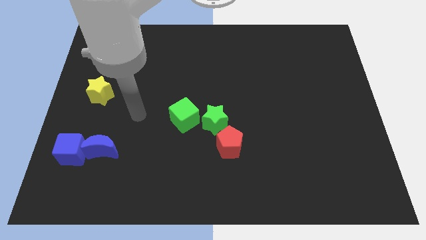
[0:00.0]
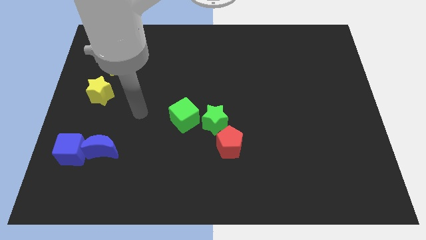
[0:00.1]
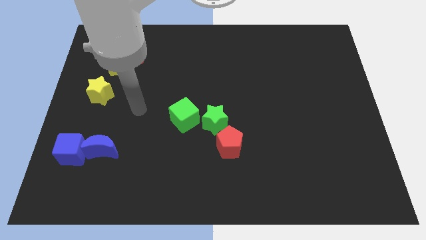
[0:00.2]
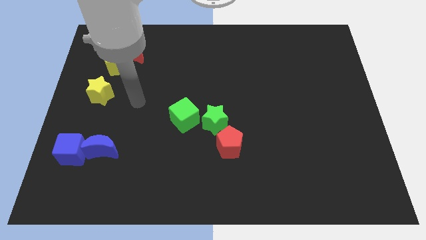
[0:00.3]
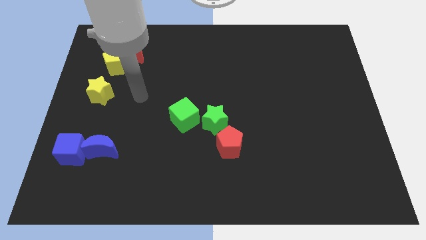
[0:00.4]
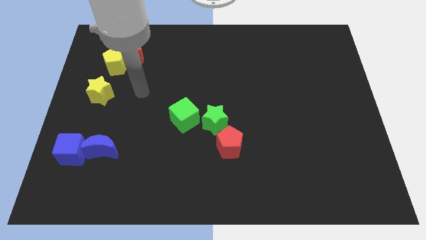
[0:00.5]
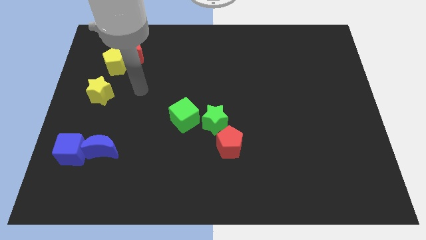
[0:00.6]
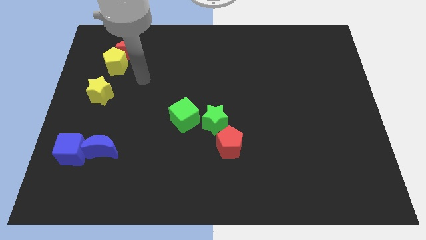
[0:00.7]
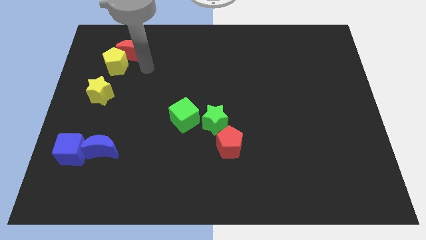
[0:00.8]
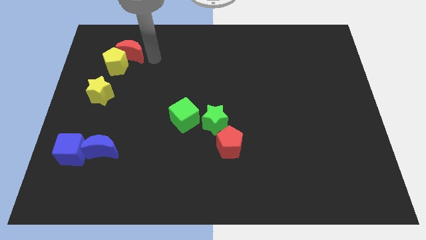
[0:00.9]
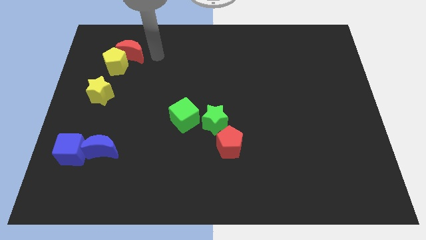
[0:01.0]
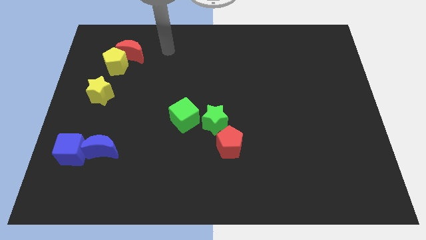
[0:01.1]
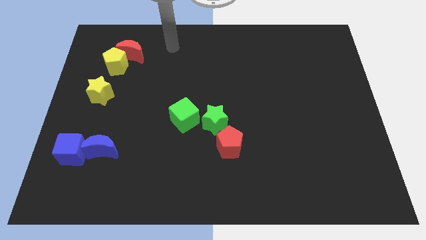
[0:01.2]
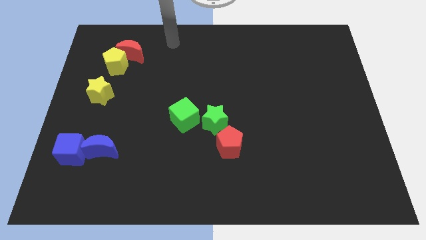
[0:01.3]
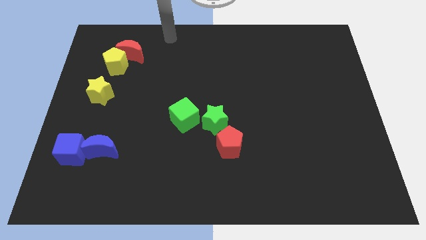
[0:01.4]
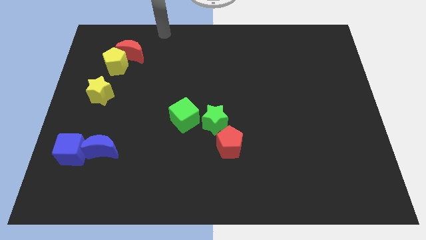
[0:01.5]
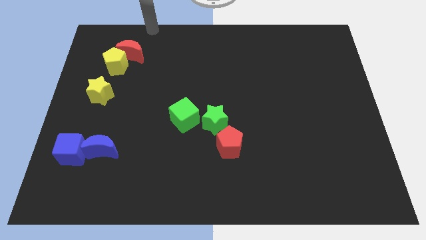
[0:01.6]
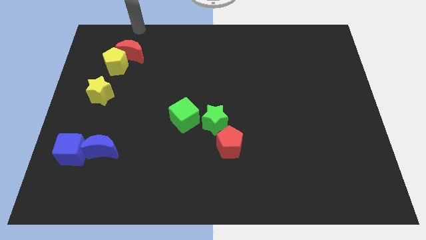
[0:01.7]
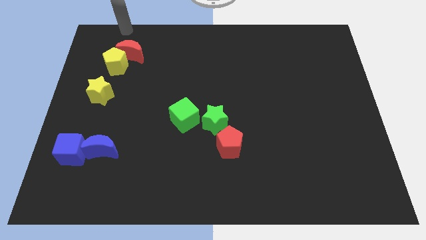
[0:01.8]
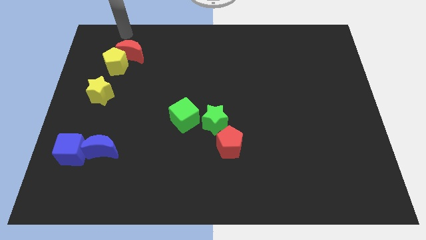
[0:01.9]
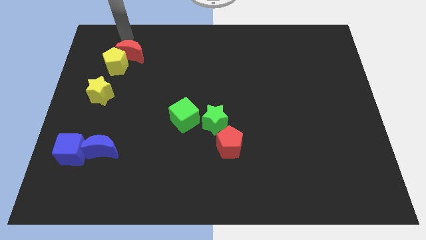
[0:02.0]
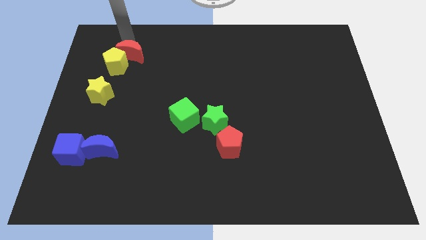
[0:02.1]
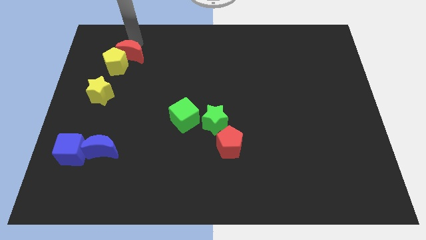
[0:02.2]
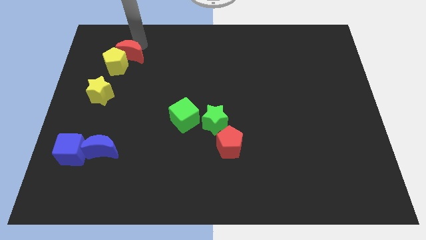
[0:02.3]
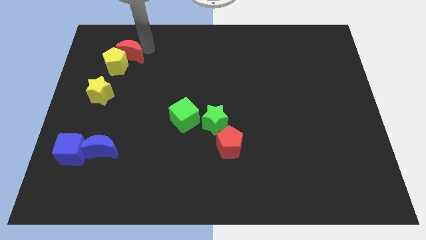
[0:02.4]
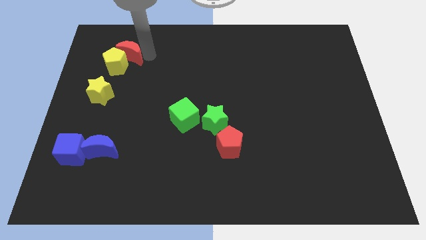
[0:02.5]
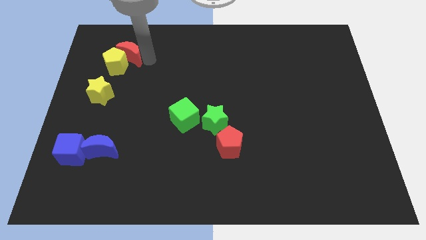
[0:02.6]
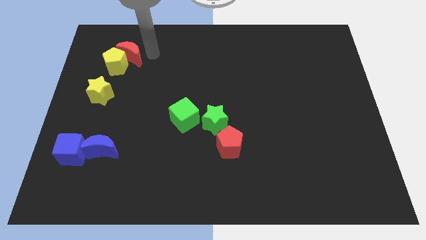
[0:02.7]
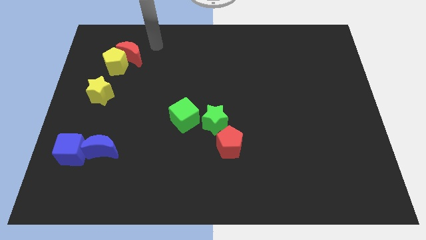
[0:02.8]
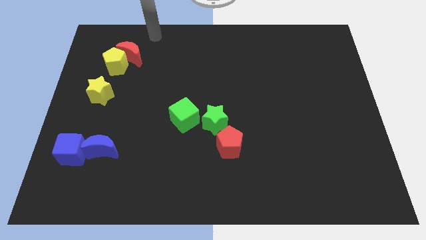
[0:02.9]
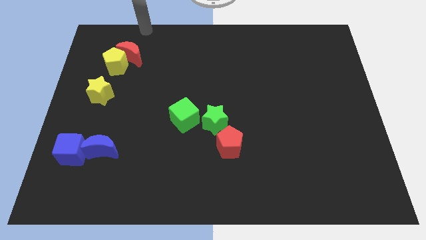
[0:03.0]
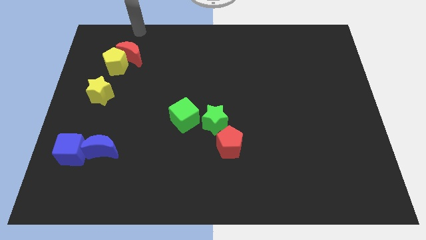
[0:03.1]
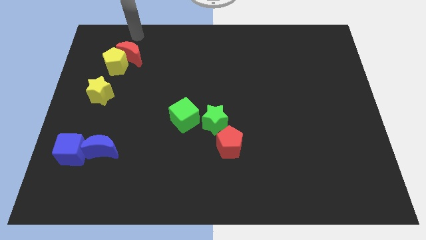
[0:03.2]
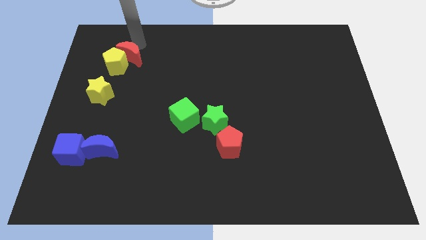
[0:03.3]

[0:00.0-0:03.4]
slightly move the red crescent to the yellow pentagon

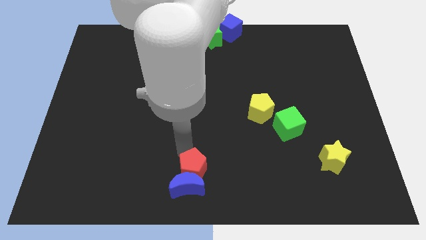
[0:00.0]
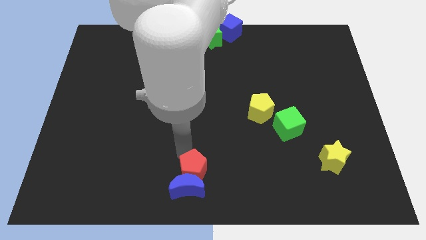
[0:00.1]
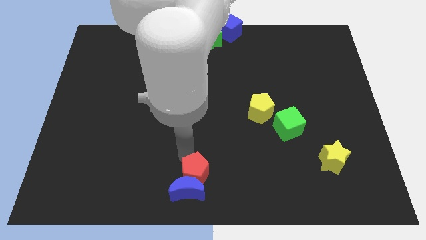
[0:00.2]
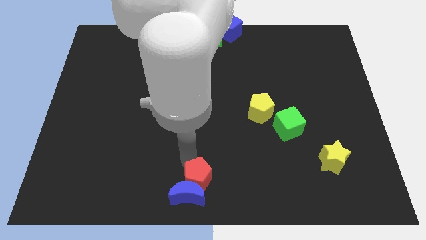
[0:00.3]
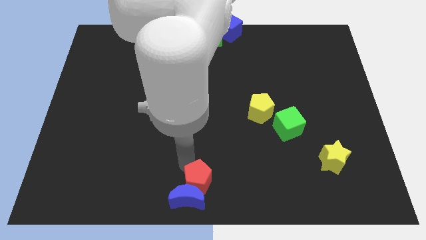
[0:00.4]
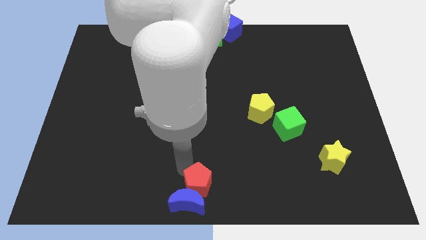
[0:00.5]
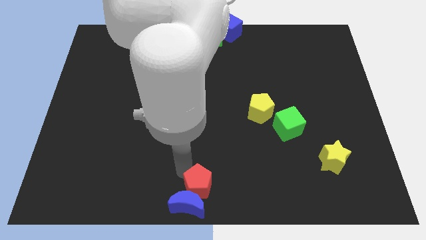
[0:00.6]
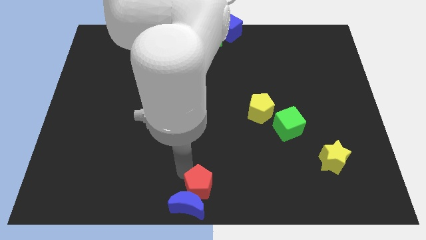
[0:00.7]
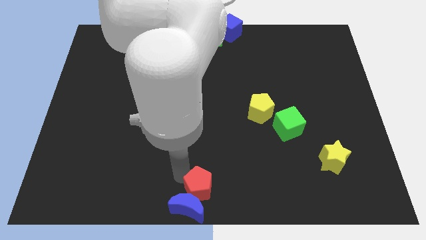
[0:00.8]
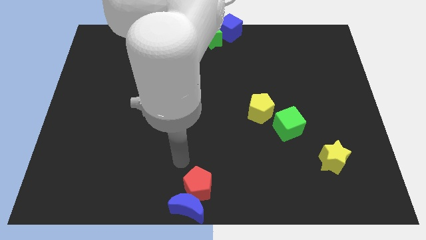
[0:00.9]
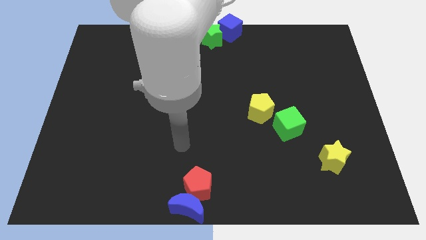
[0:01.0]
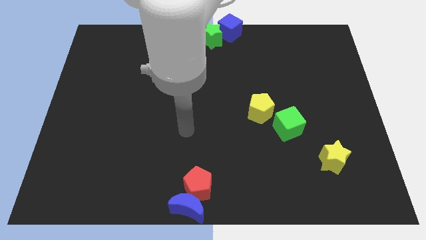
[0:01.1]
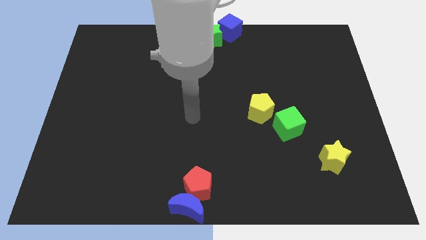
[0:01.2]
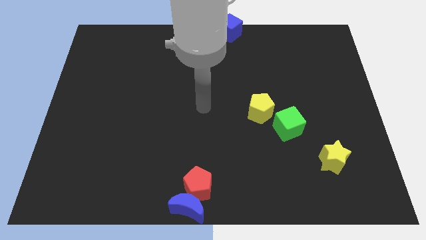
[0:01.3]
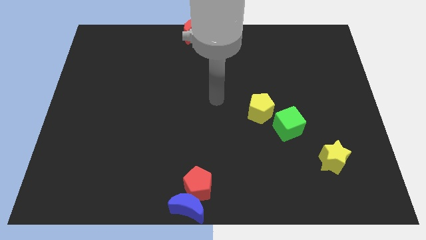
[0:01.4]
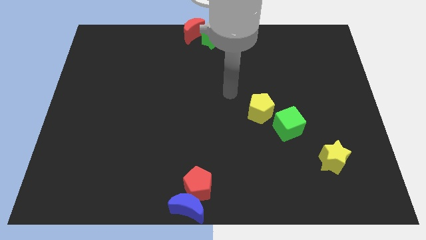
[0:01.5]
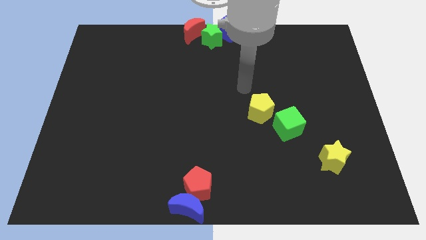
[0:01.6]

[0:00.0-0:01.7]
push the blue moon to the bottom of the board using the red pentagon

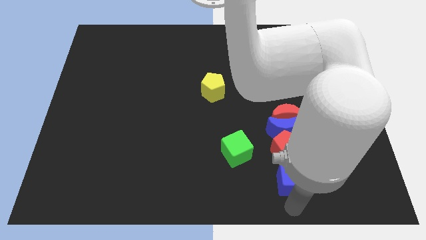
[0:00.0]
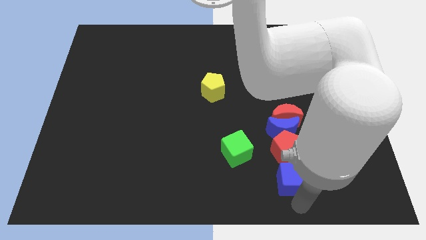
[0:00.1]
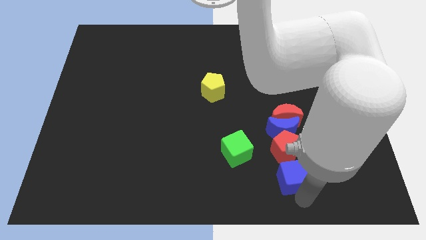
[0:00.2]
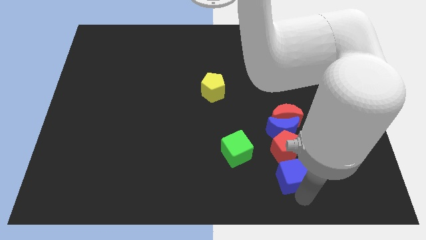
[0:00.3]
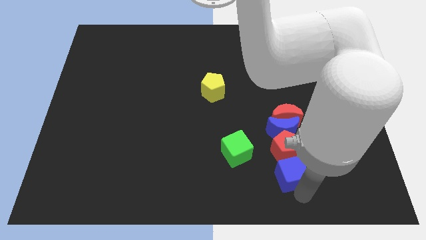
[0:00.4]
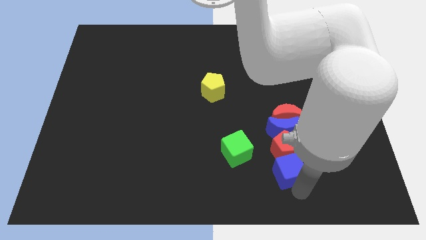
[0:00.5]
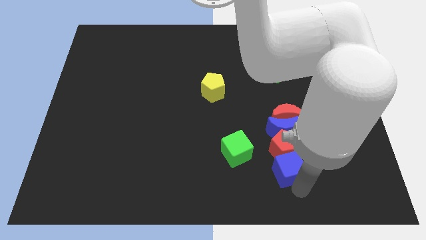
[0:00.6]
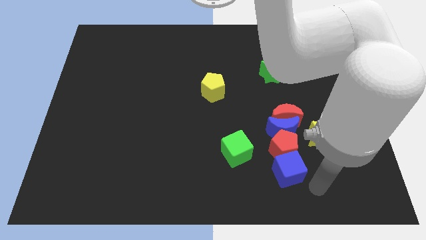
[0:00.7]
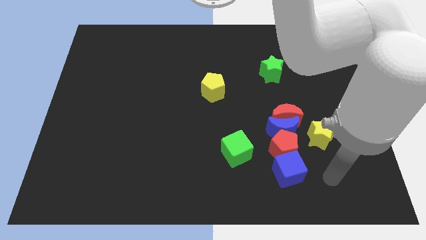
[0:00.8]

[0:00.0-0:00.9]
place the blue cube below the red pentagon

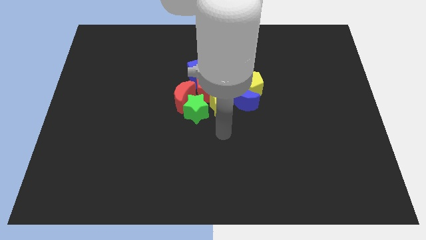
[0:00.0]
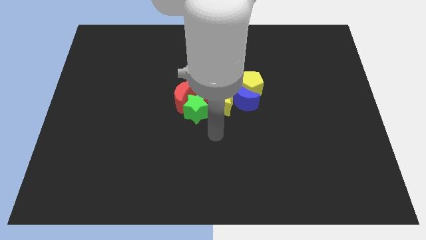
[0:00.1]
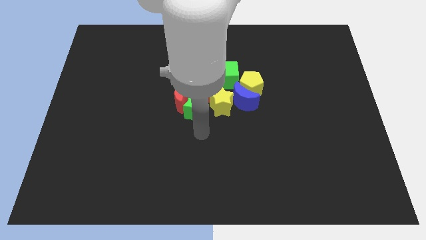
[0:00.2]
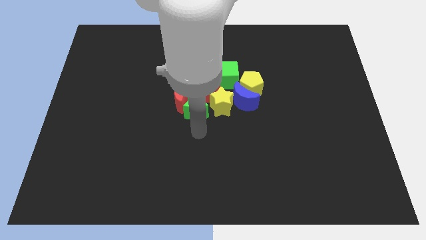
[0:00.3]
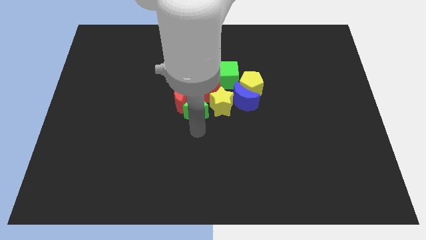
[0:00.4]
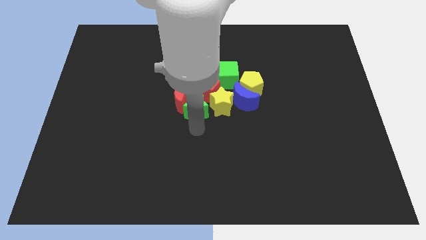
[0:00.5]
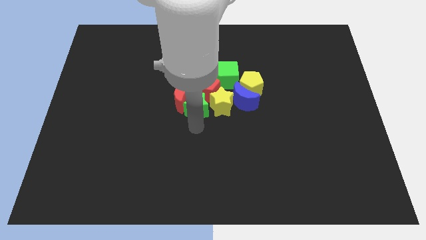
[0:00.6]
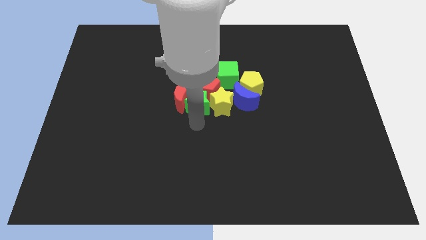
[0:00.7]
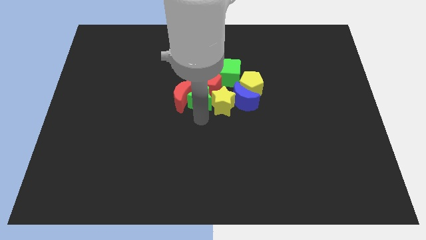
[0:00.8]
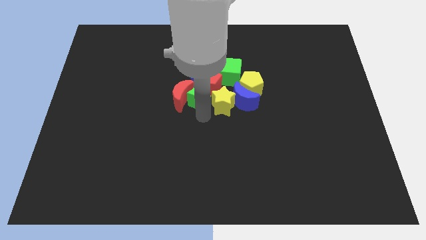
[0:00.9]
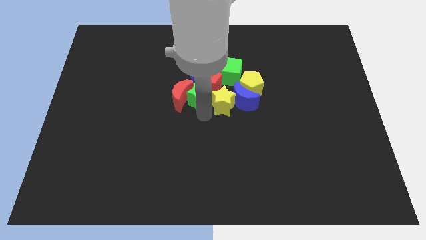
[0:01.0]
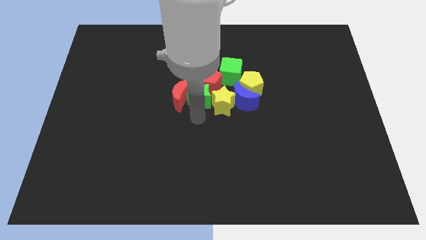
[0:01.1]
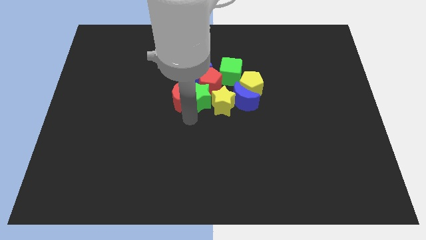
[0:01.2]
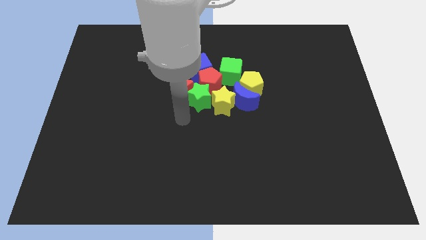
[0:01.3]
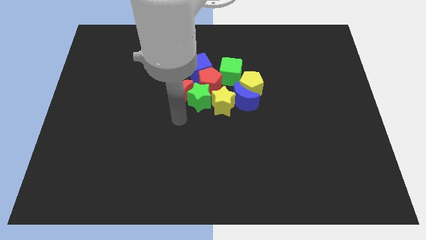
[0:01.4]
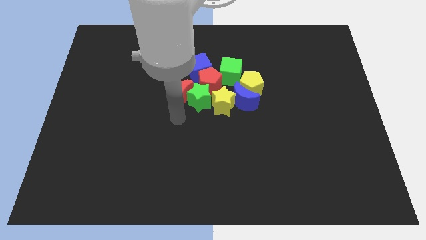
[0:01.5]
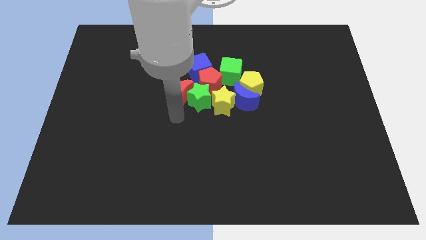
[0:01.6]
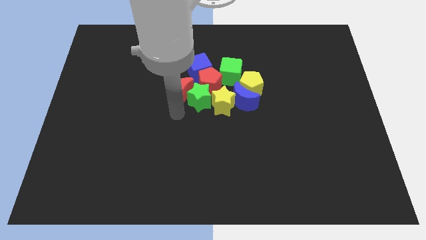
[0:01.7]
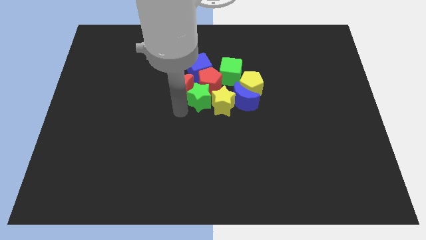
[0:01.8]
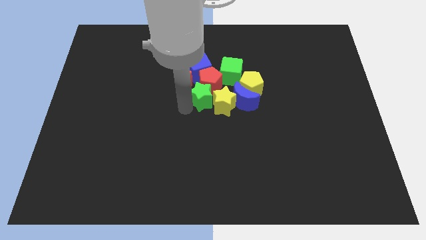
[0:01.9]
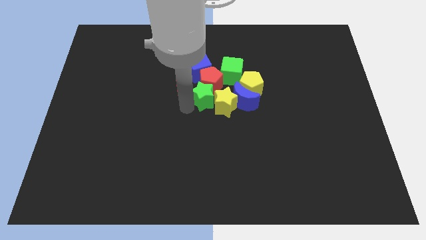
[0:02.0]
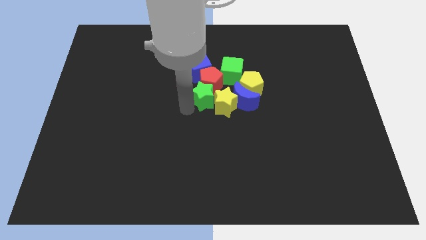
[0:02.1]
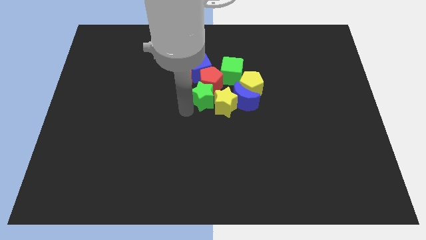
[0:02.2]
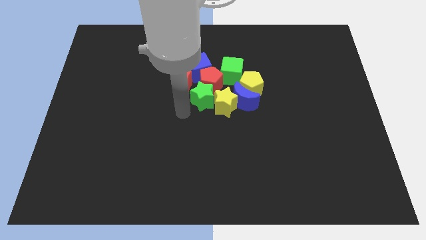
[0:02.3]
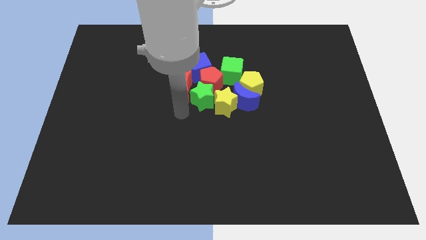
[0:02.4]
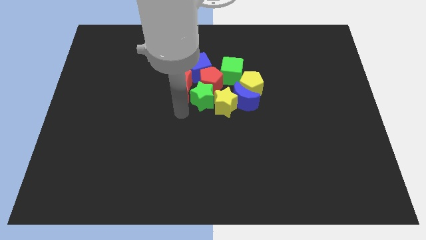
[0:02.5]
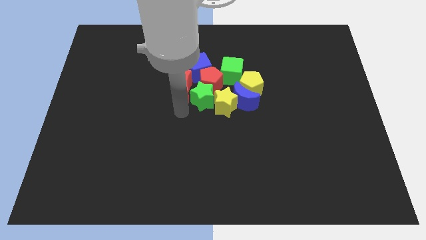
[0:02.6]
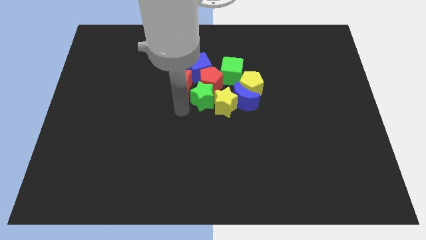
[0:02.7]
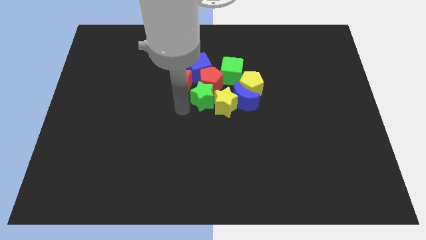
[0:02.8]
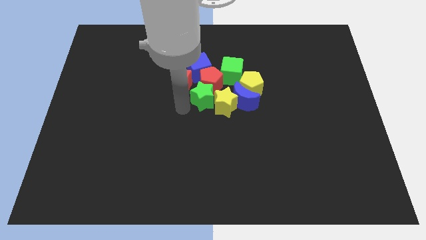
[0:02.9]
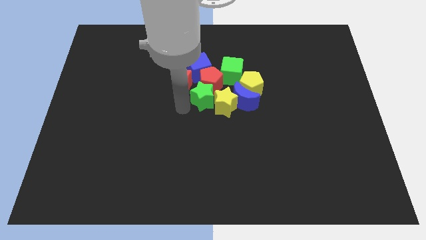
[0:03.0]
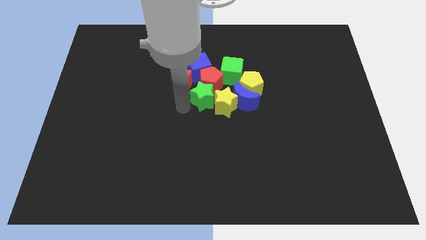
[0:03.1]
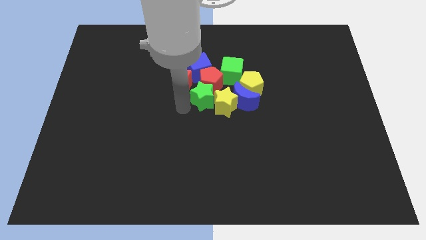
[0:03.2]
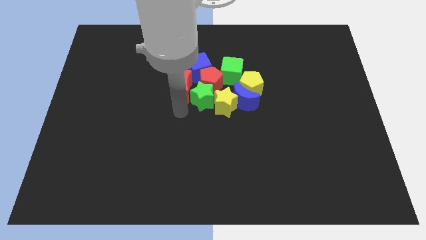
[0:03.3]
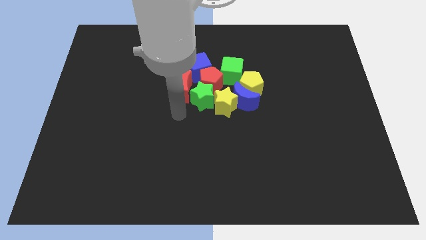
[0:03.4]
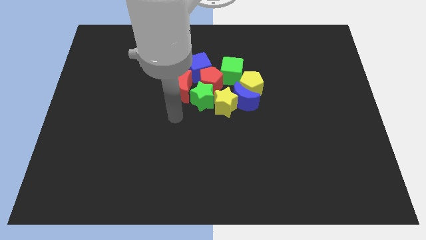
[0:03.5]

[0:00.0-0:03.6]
push the green star in the group of blocks
